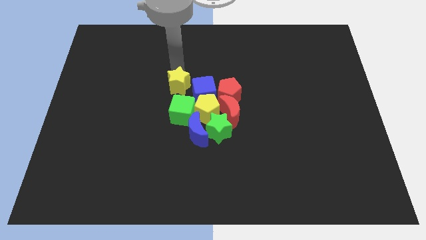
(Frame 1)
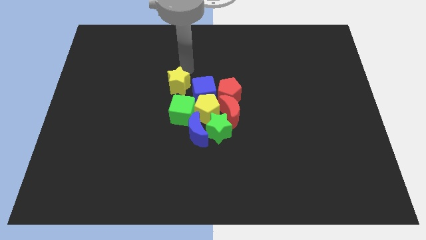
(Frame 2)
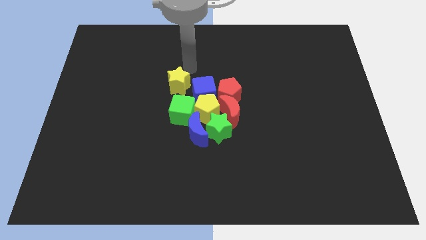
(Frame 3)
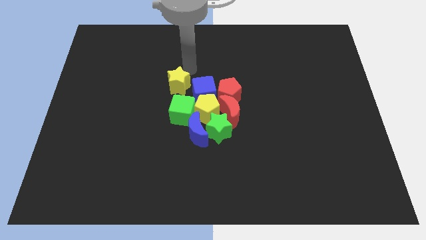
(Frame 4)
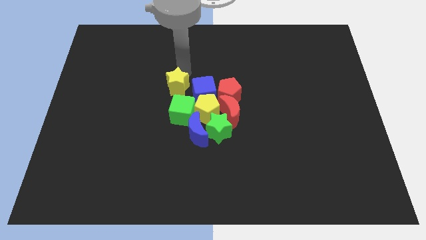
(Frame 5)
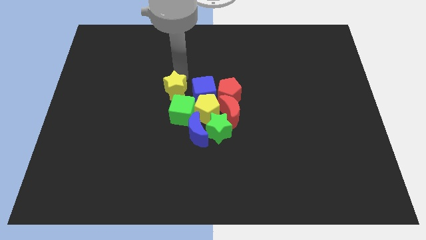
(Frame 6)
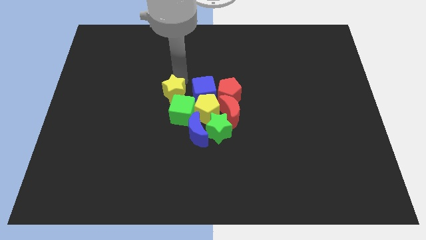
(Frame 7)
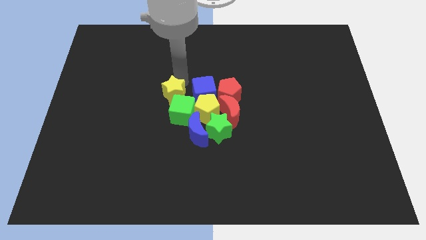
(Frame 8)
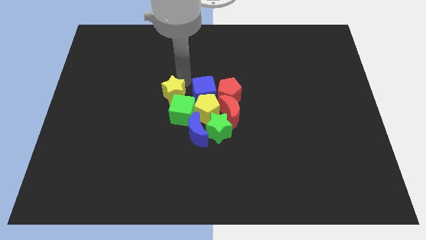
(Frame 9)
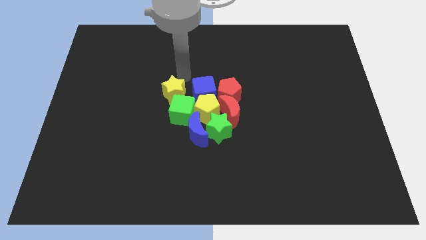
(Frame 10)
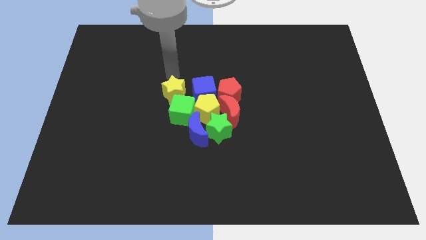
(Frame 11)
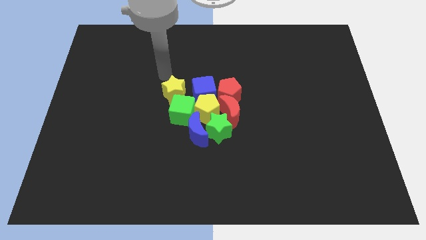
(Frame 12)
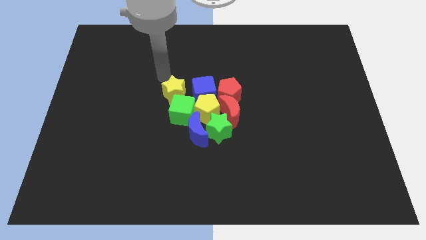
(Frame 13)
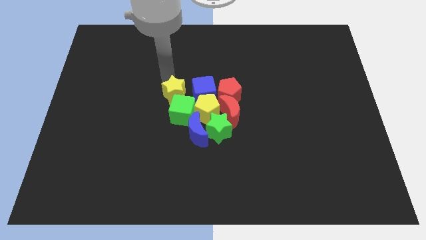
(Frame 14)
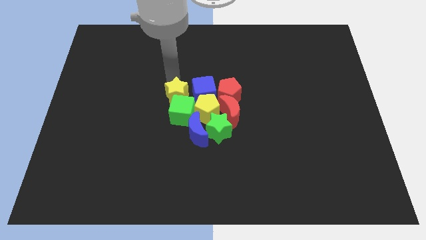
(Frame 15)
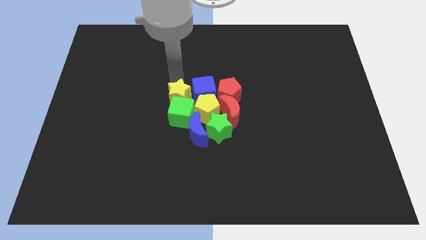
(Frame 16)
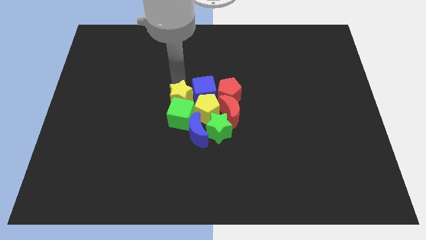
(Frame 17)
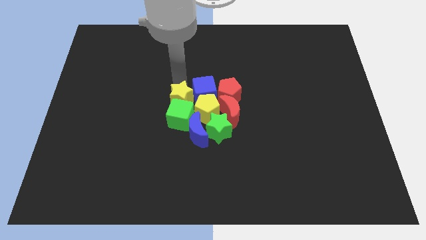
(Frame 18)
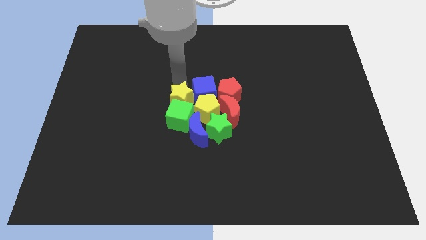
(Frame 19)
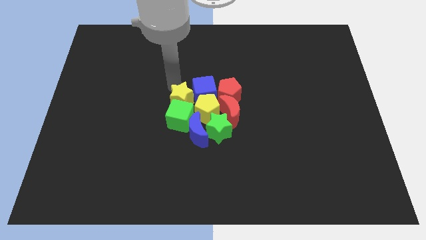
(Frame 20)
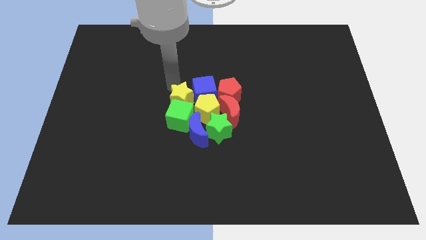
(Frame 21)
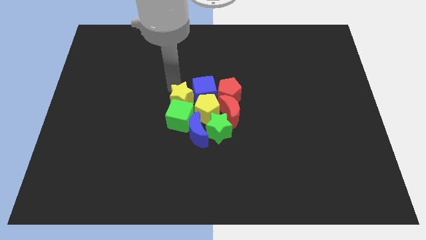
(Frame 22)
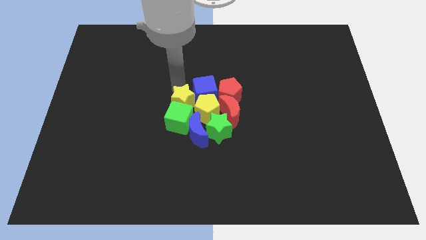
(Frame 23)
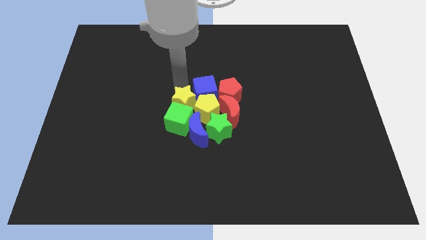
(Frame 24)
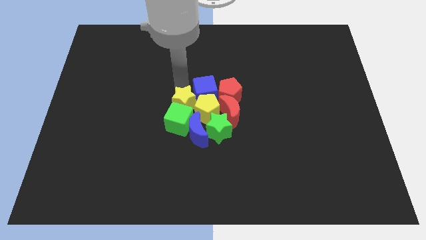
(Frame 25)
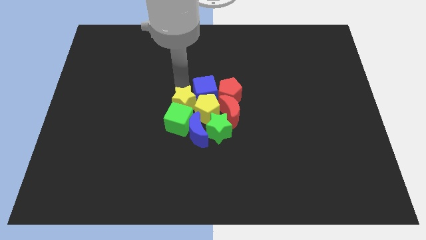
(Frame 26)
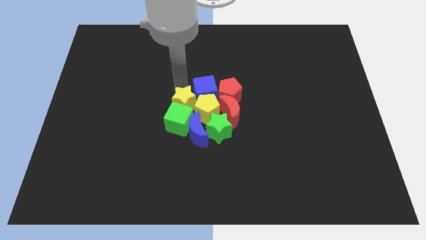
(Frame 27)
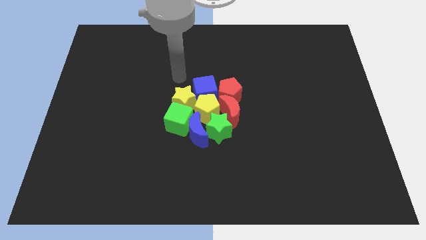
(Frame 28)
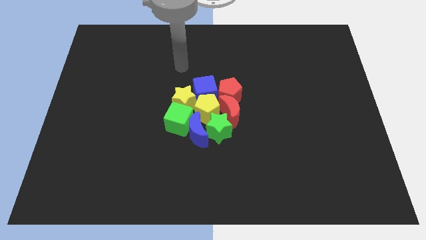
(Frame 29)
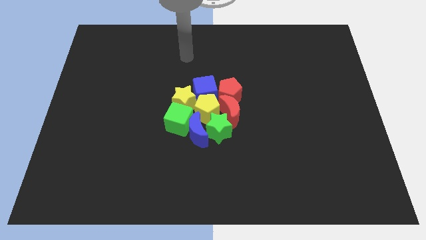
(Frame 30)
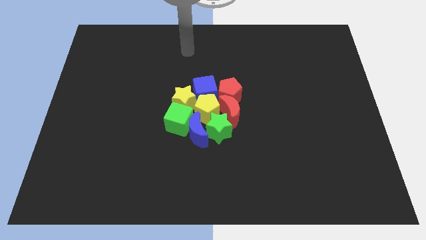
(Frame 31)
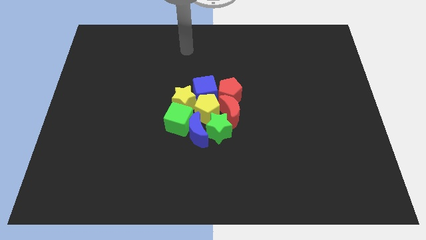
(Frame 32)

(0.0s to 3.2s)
add the yellow star to the group of blocks

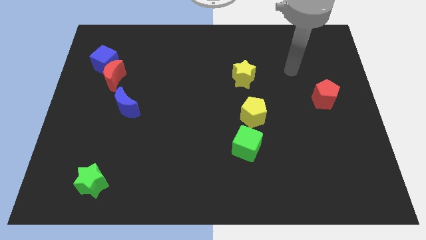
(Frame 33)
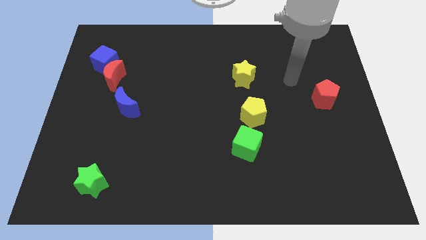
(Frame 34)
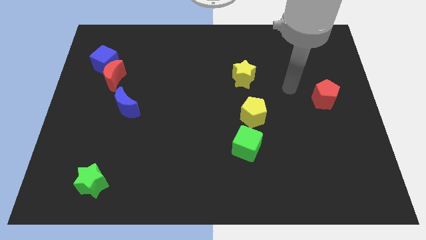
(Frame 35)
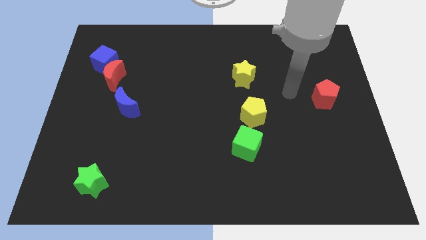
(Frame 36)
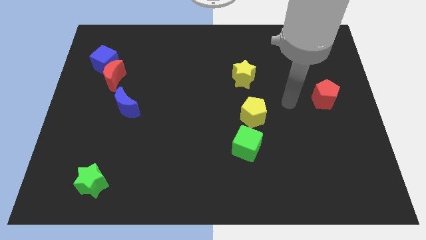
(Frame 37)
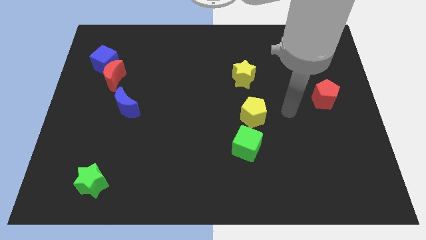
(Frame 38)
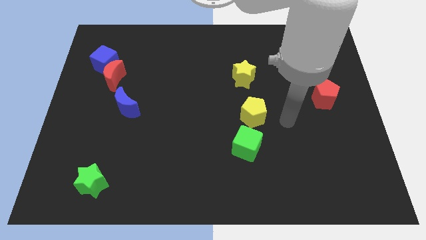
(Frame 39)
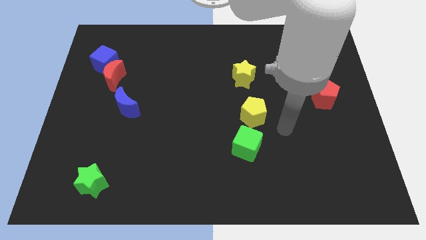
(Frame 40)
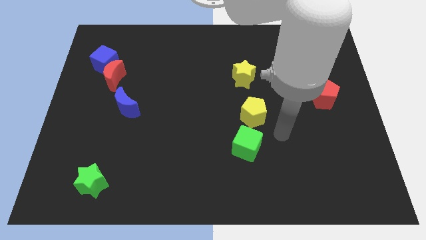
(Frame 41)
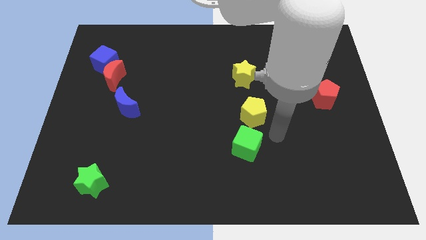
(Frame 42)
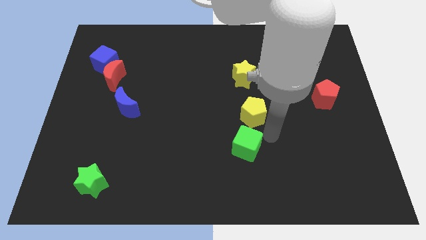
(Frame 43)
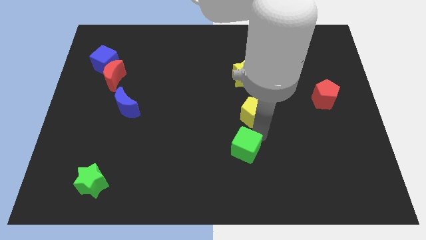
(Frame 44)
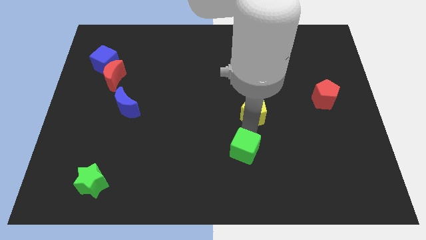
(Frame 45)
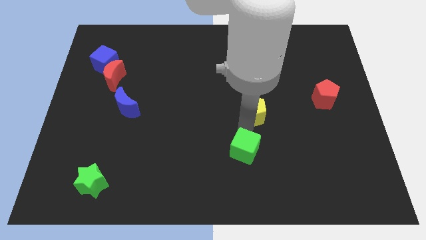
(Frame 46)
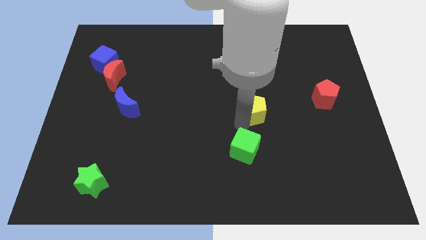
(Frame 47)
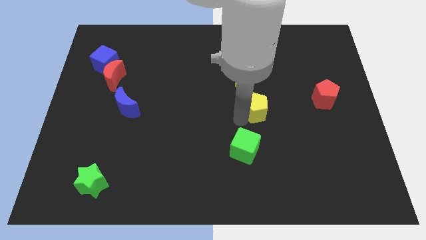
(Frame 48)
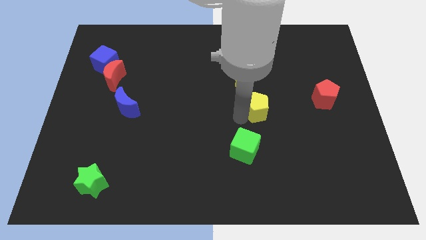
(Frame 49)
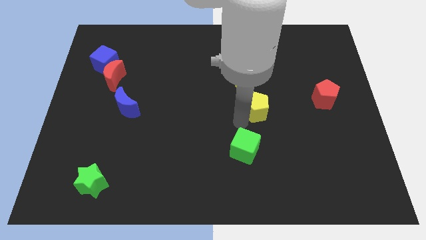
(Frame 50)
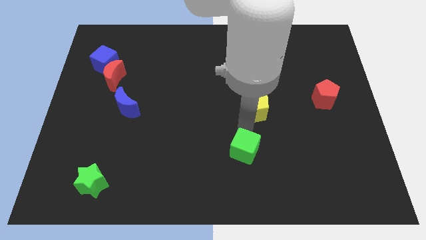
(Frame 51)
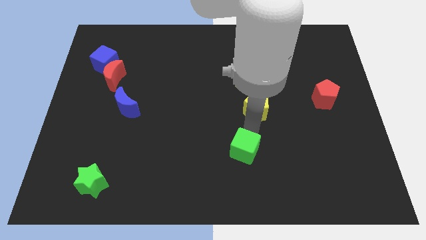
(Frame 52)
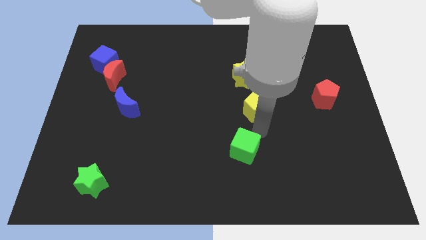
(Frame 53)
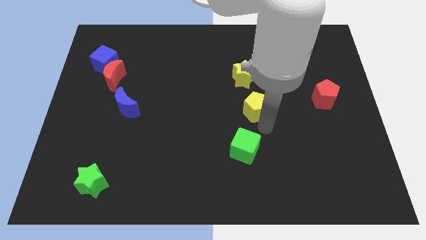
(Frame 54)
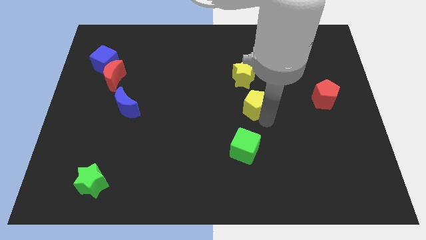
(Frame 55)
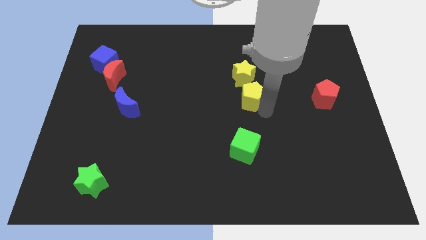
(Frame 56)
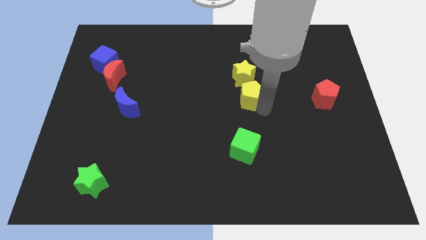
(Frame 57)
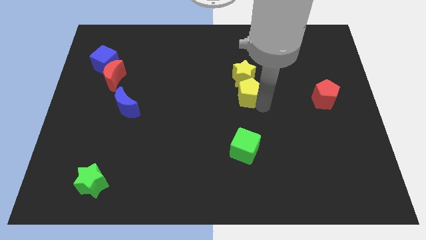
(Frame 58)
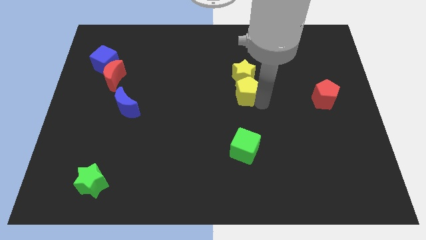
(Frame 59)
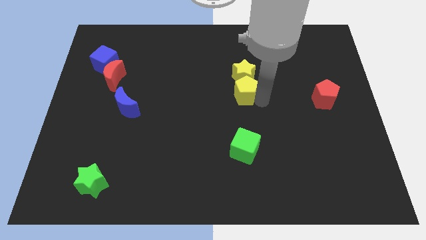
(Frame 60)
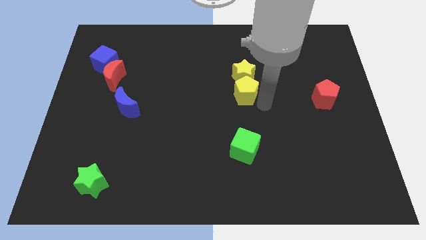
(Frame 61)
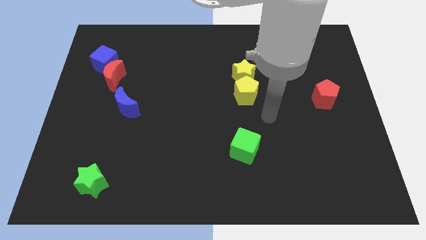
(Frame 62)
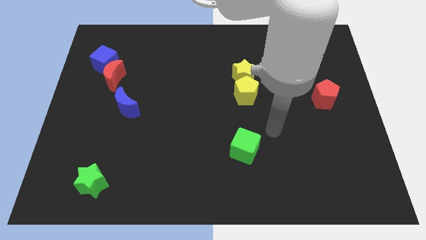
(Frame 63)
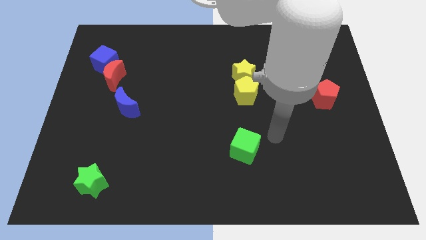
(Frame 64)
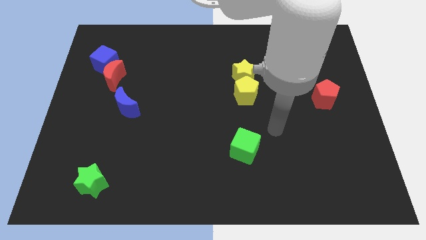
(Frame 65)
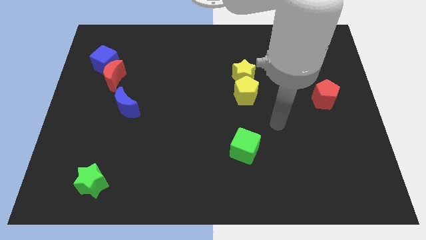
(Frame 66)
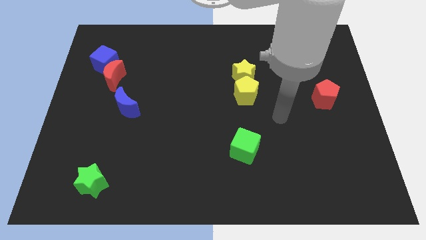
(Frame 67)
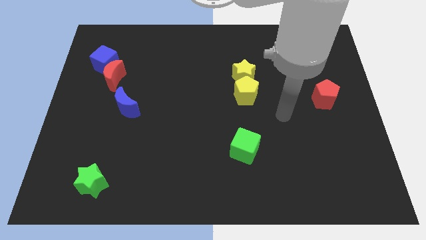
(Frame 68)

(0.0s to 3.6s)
push the yellow pentagon into the yellow star

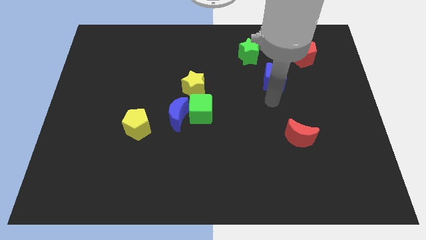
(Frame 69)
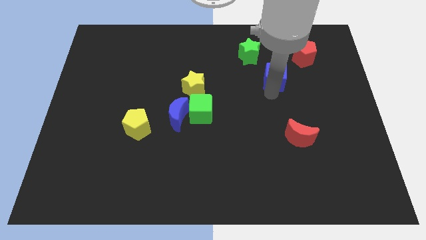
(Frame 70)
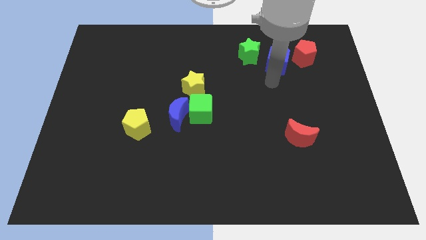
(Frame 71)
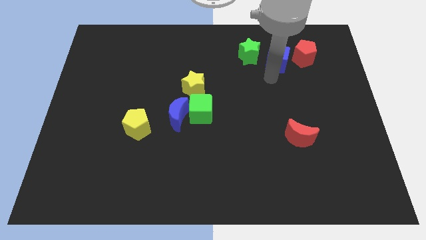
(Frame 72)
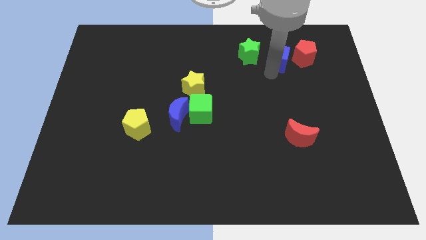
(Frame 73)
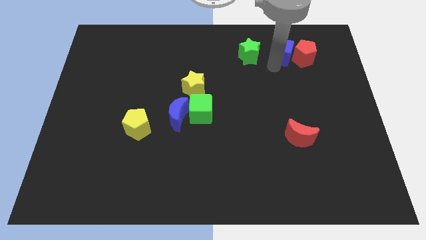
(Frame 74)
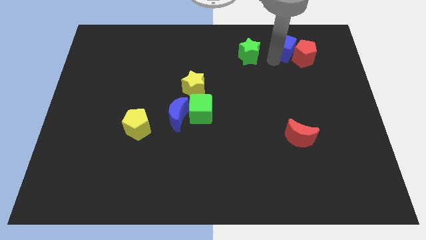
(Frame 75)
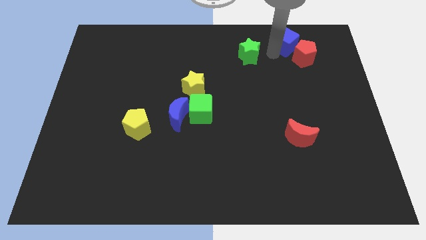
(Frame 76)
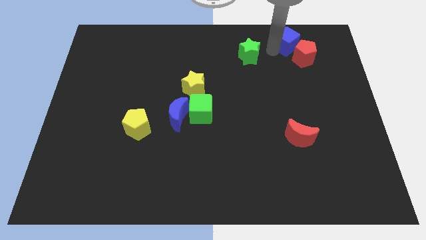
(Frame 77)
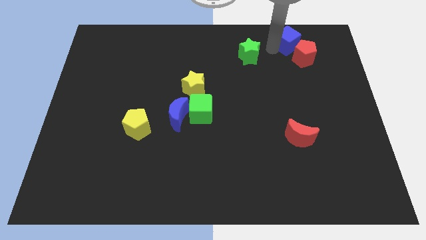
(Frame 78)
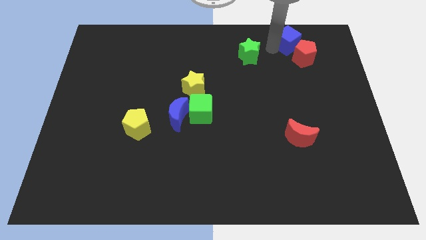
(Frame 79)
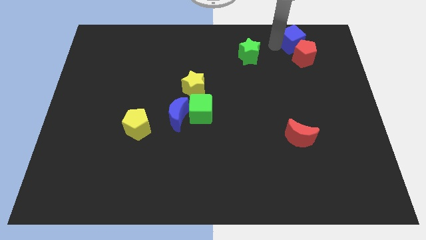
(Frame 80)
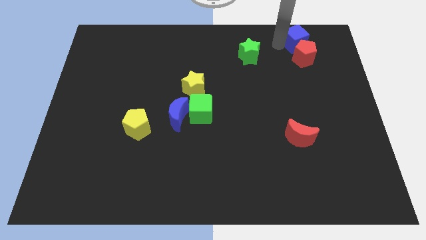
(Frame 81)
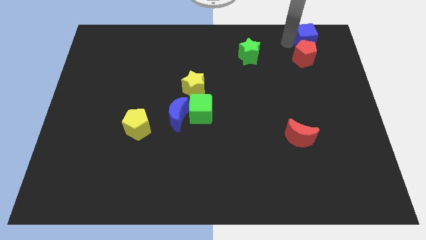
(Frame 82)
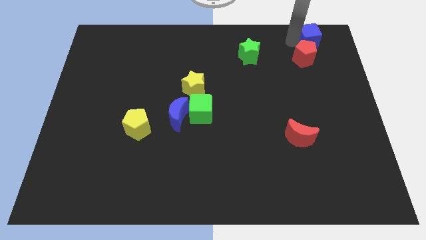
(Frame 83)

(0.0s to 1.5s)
place the blue cube above the red pentagon

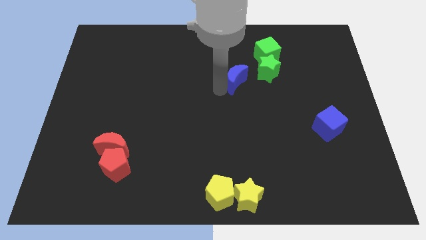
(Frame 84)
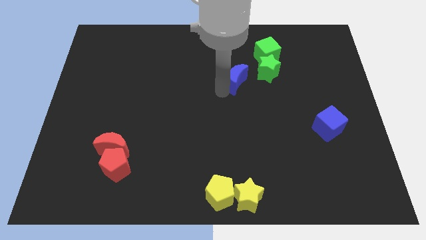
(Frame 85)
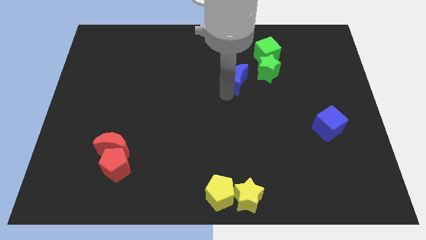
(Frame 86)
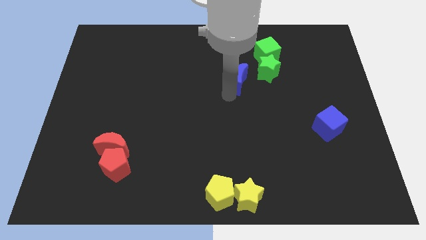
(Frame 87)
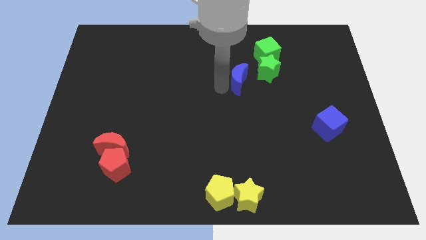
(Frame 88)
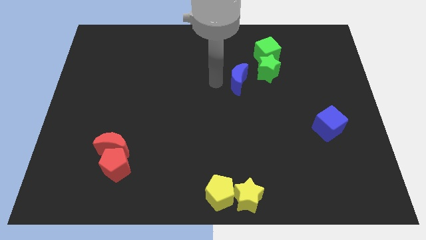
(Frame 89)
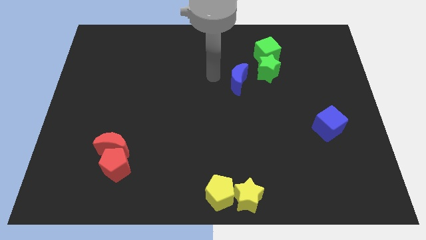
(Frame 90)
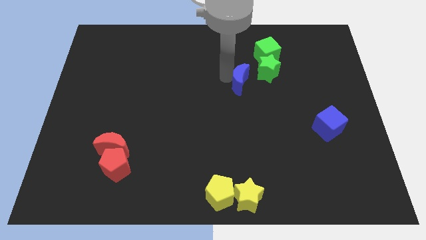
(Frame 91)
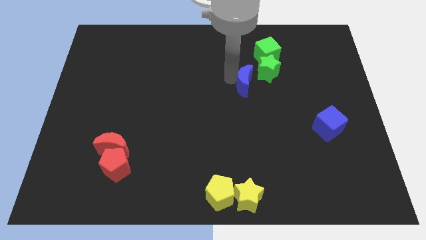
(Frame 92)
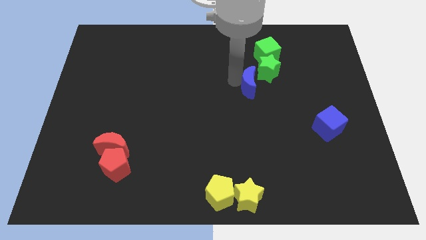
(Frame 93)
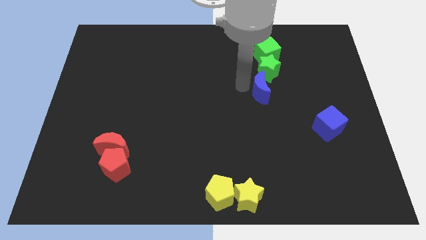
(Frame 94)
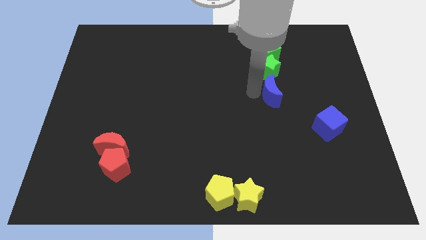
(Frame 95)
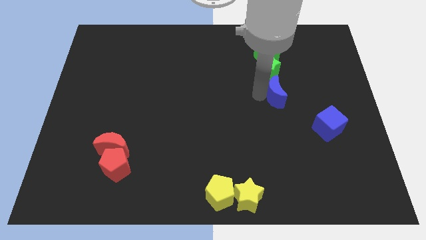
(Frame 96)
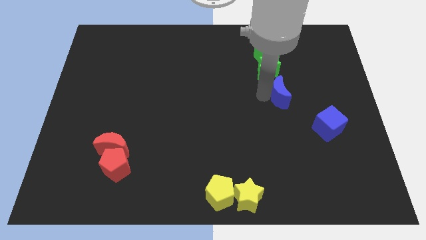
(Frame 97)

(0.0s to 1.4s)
place blue moon to the bottom right side of the green star
